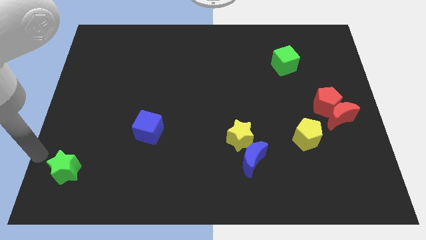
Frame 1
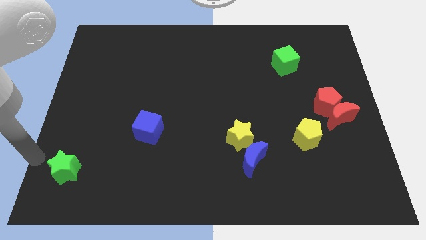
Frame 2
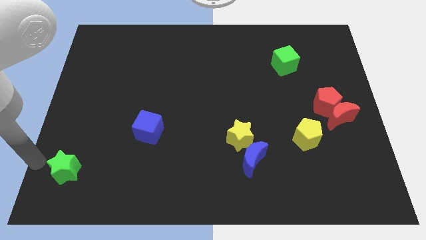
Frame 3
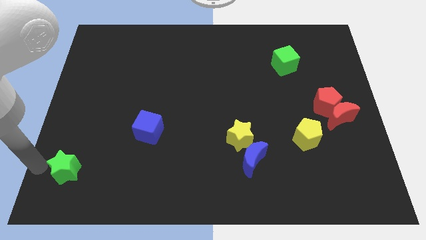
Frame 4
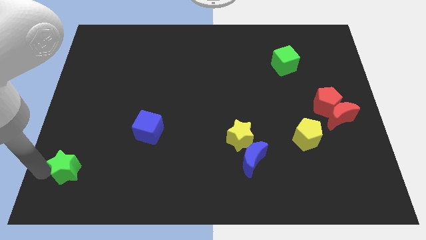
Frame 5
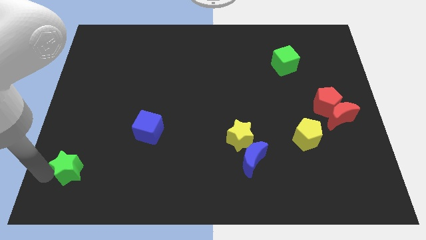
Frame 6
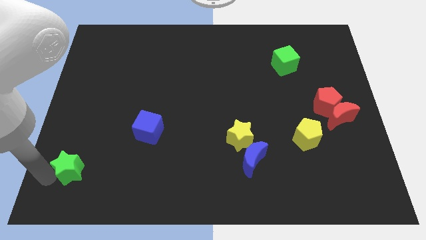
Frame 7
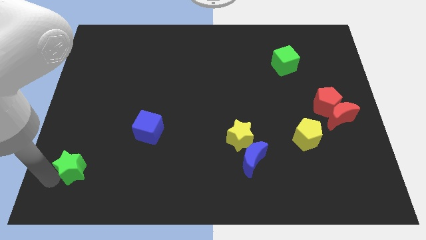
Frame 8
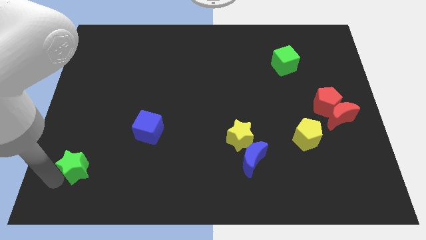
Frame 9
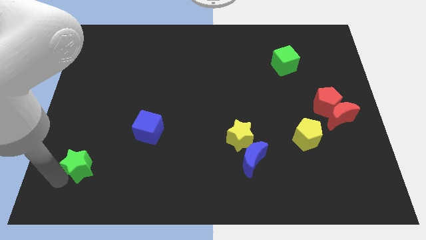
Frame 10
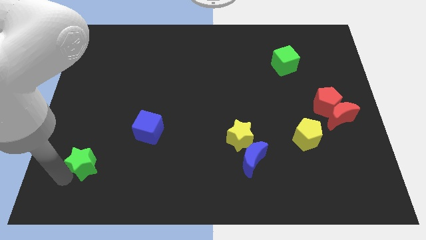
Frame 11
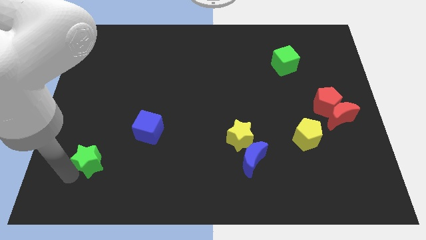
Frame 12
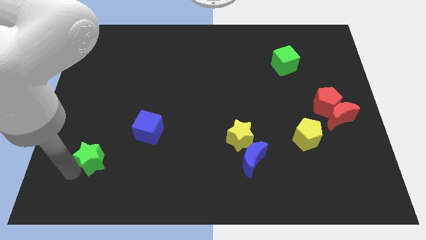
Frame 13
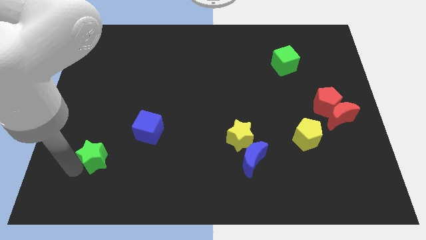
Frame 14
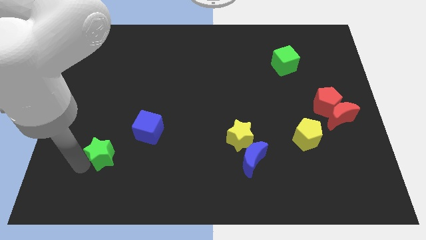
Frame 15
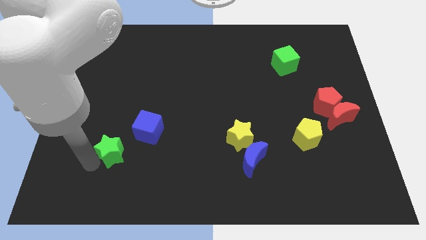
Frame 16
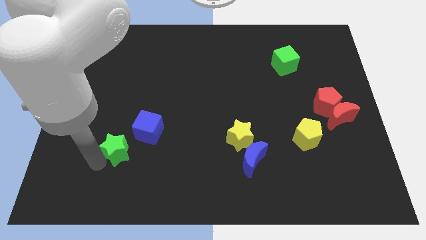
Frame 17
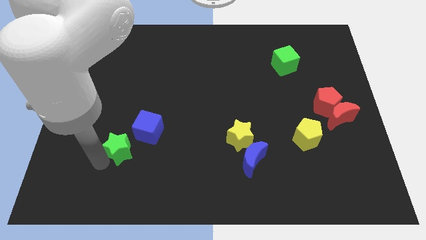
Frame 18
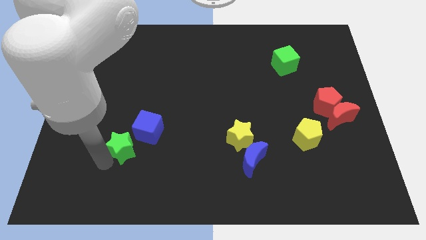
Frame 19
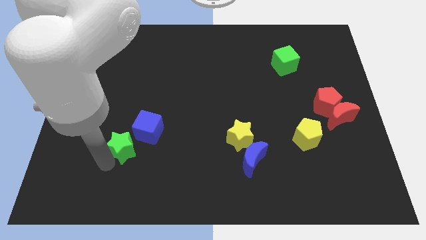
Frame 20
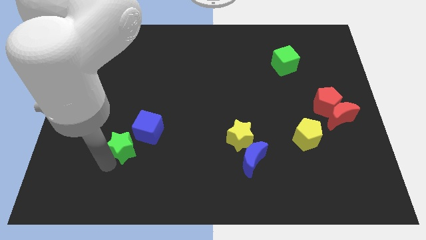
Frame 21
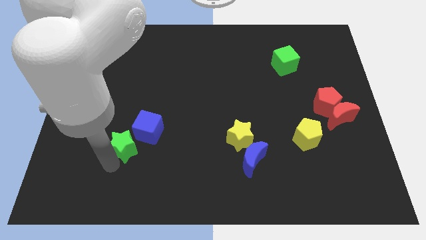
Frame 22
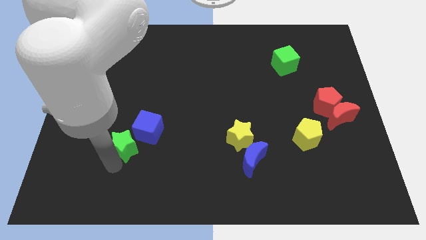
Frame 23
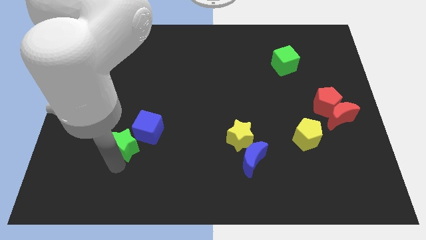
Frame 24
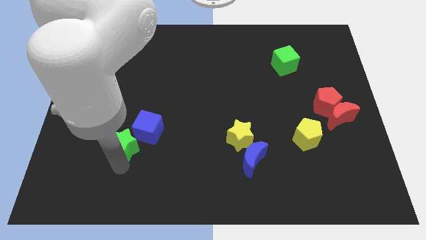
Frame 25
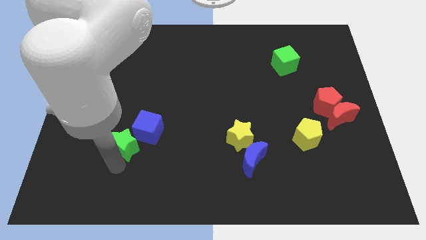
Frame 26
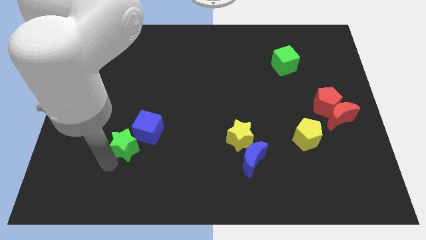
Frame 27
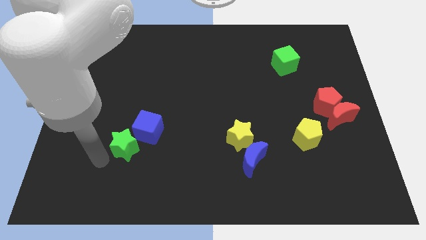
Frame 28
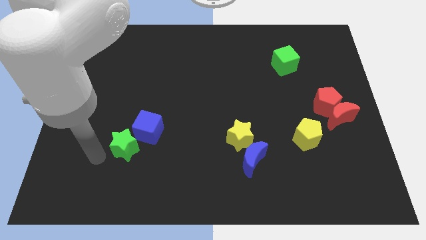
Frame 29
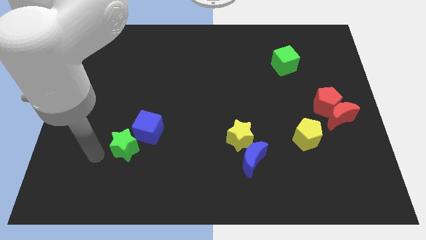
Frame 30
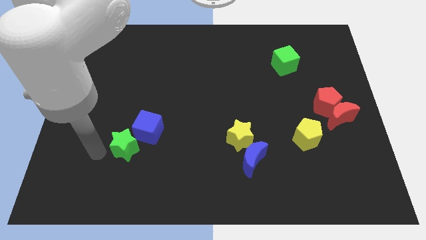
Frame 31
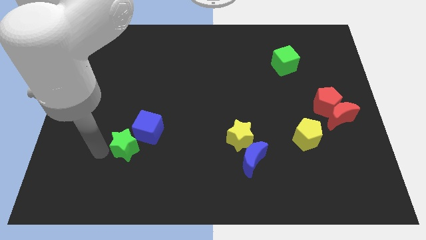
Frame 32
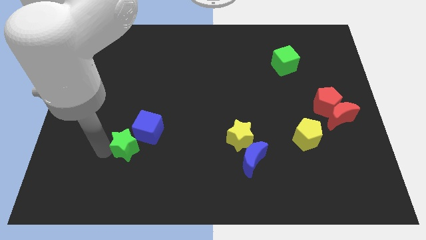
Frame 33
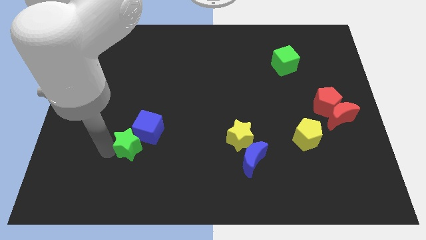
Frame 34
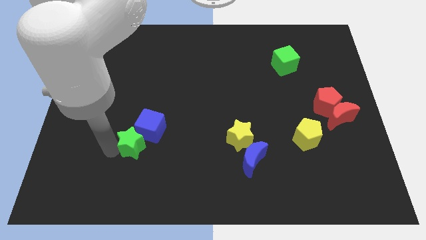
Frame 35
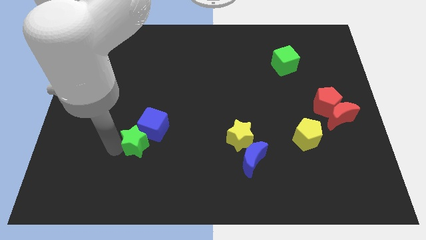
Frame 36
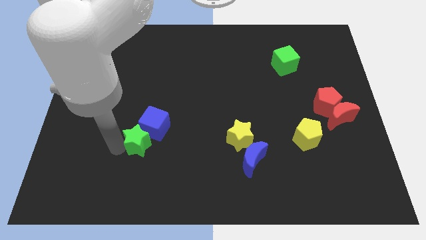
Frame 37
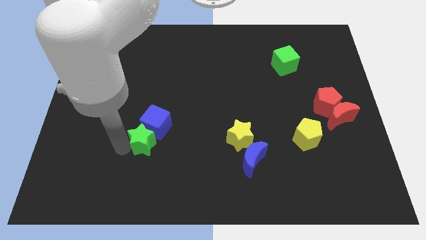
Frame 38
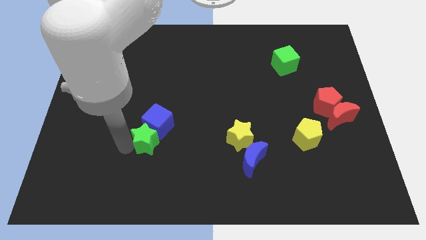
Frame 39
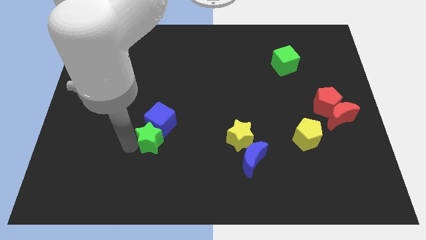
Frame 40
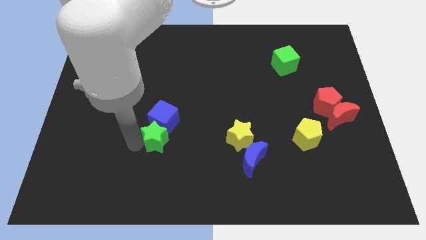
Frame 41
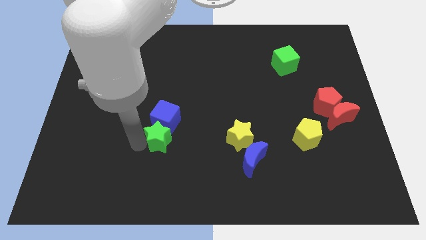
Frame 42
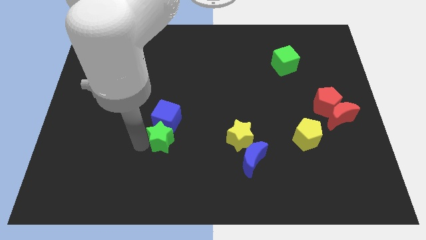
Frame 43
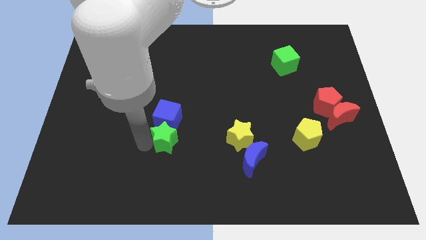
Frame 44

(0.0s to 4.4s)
push the green star to the bottom of the blue cube

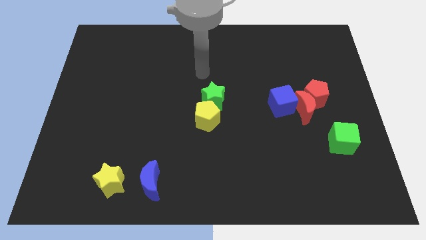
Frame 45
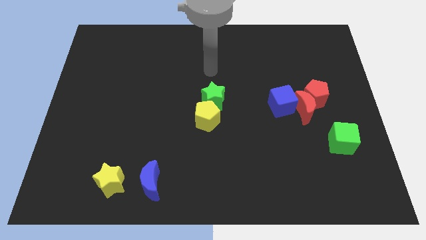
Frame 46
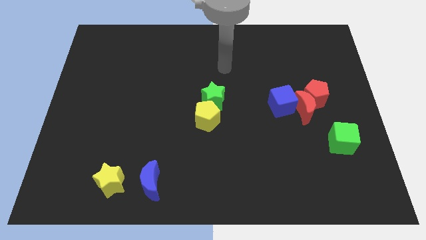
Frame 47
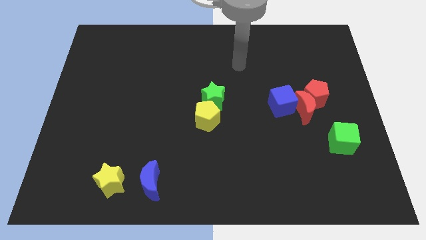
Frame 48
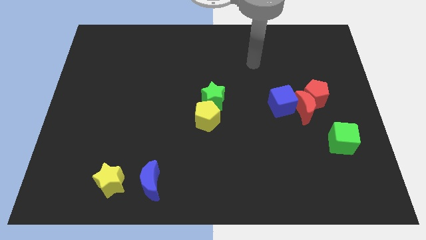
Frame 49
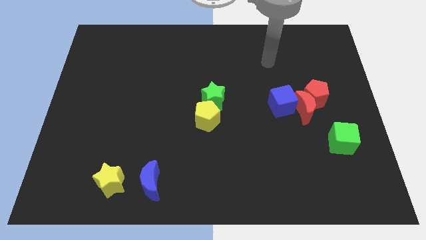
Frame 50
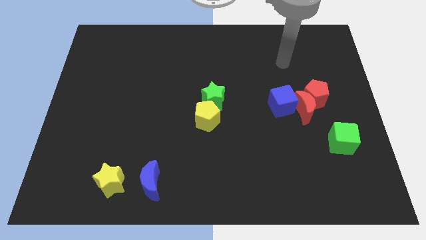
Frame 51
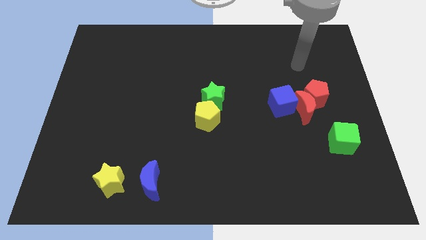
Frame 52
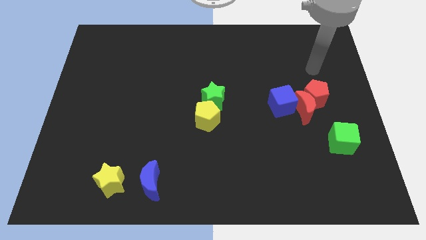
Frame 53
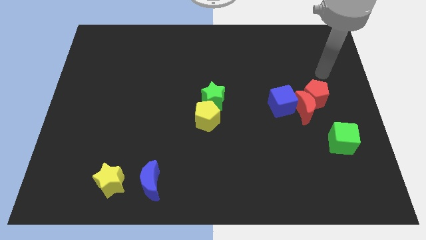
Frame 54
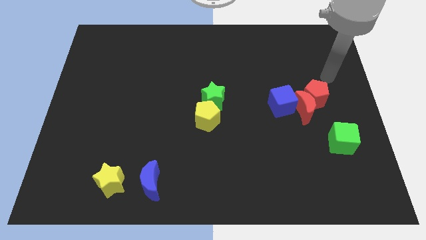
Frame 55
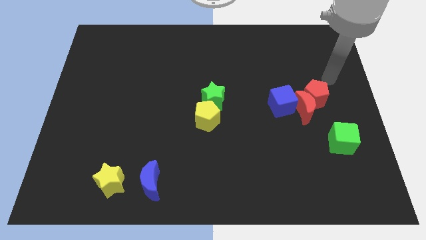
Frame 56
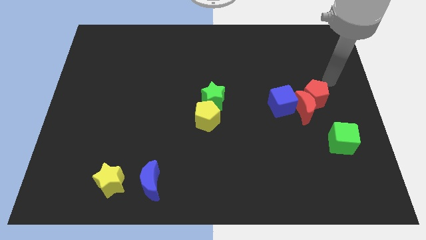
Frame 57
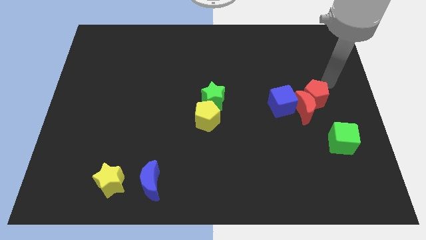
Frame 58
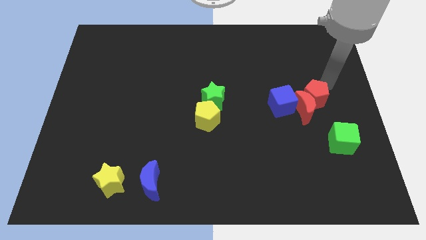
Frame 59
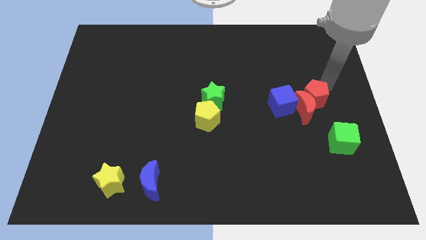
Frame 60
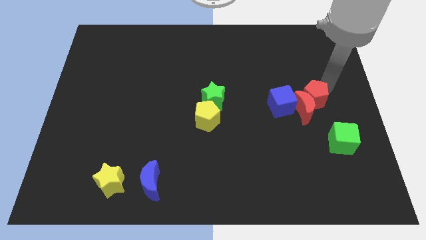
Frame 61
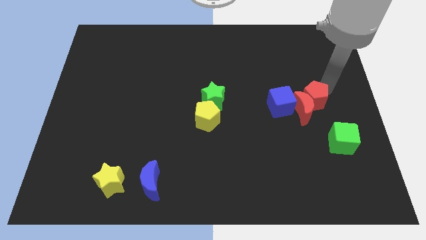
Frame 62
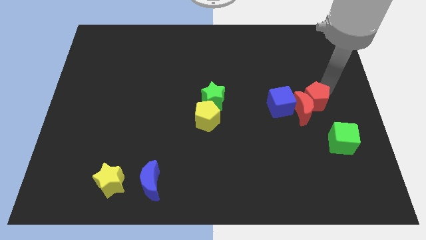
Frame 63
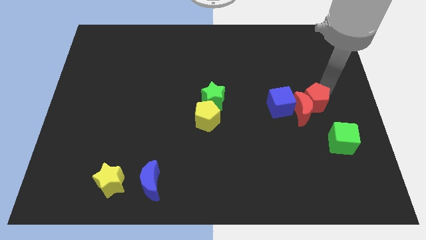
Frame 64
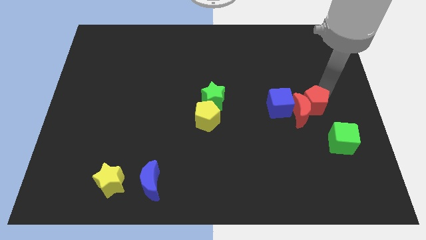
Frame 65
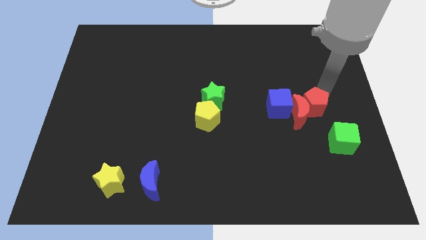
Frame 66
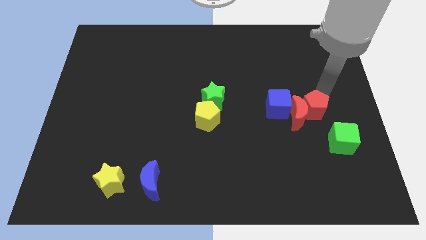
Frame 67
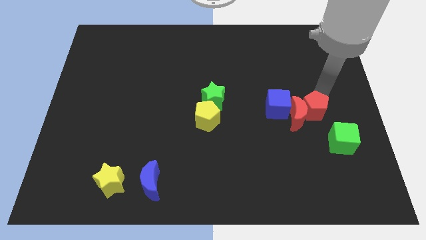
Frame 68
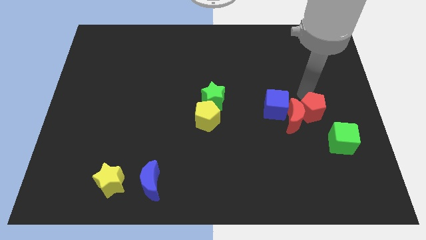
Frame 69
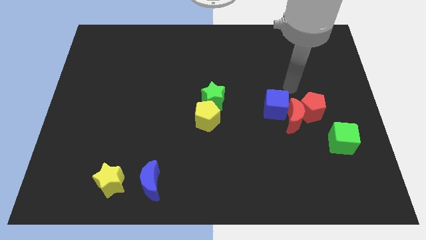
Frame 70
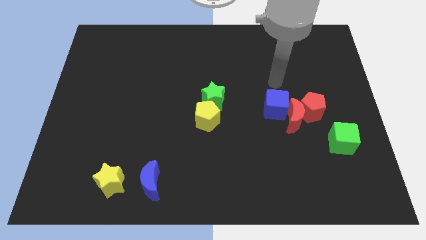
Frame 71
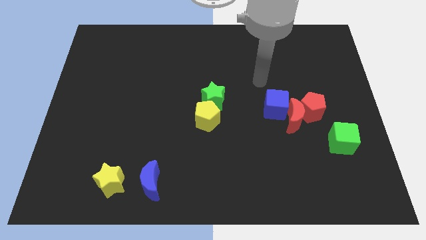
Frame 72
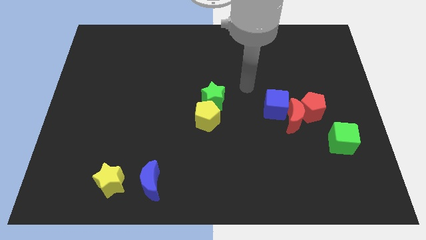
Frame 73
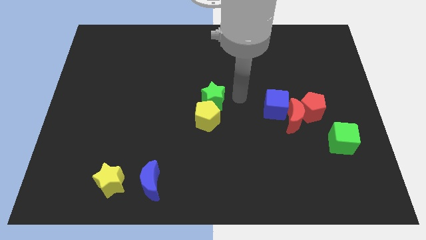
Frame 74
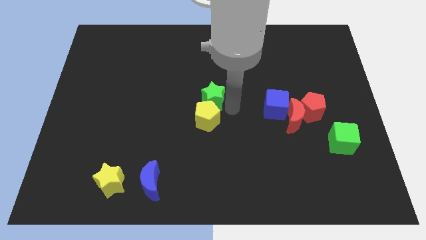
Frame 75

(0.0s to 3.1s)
move the red pentagon downwards slightly

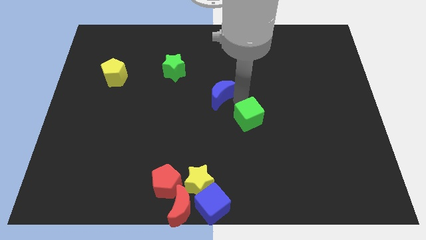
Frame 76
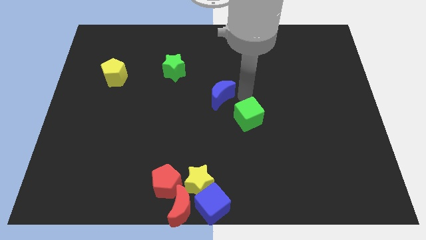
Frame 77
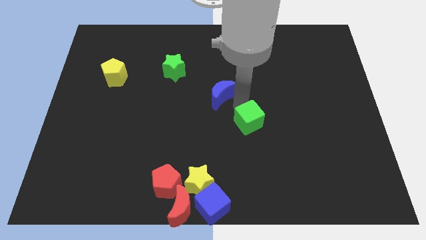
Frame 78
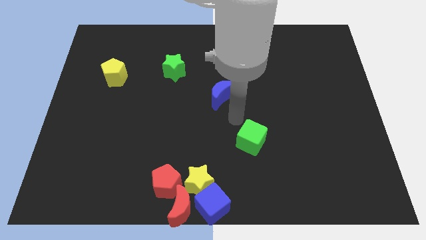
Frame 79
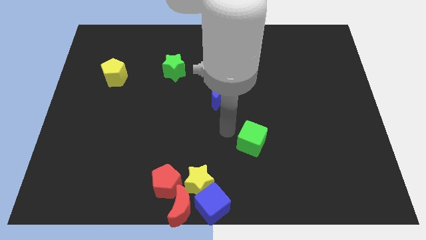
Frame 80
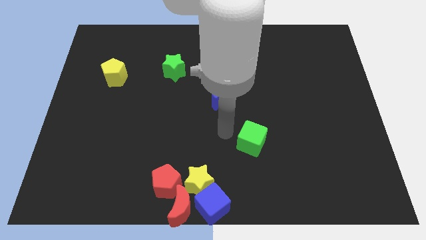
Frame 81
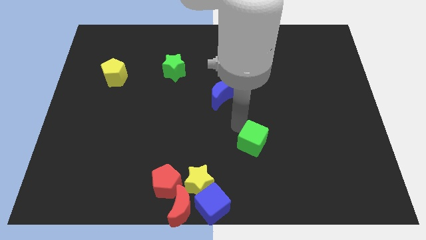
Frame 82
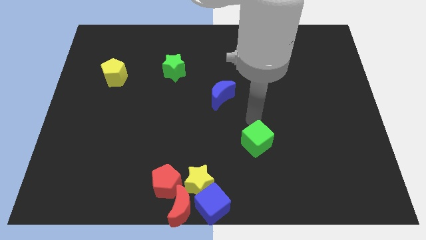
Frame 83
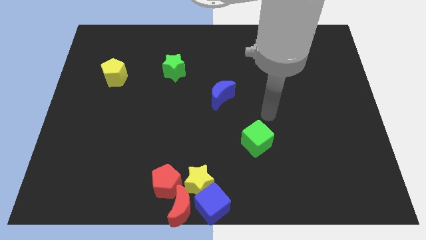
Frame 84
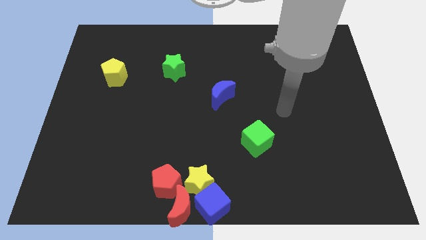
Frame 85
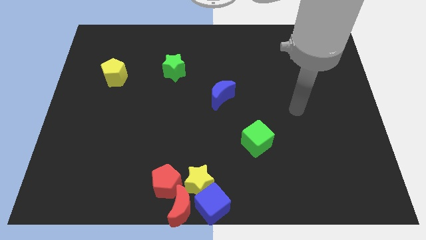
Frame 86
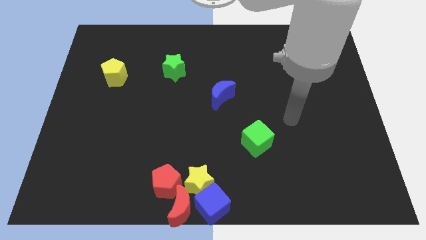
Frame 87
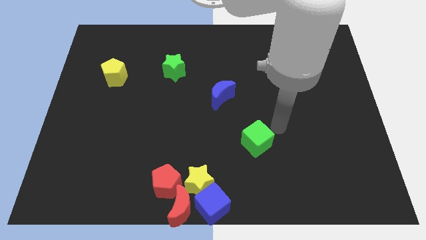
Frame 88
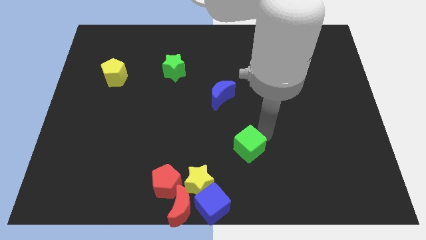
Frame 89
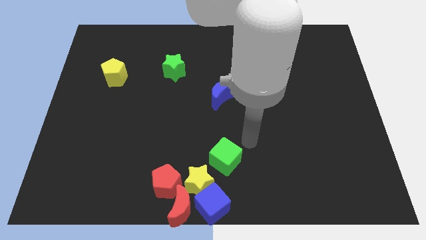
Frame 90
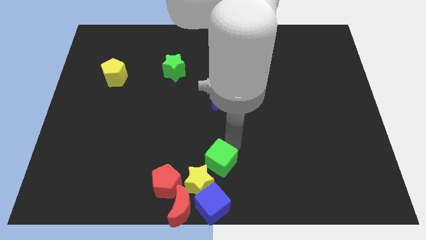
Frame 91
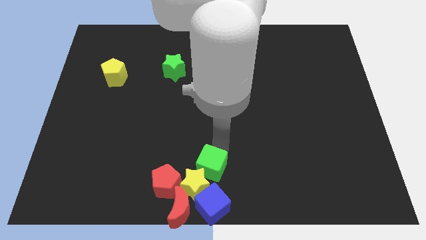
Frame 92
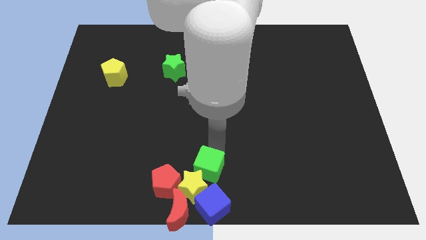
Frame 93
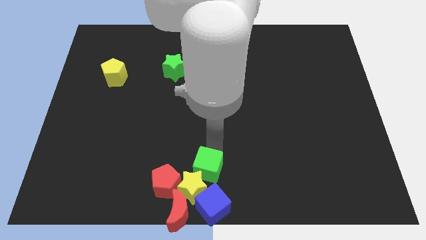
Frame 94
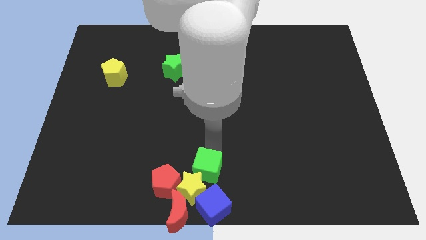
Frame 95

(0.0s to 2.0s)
push the green cube into the group of objects
